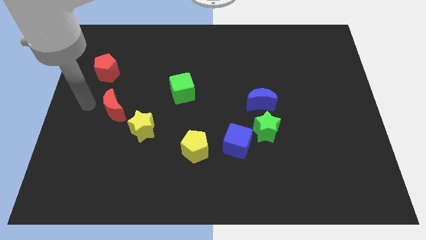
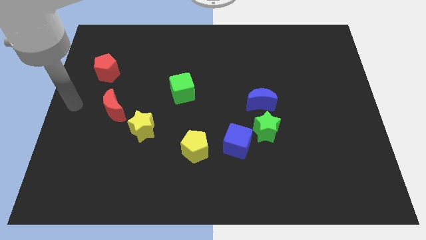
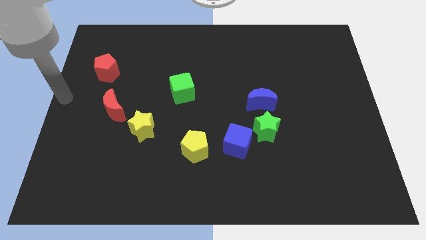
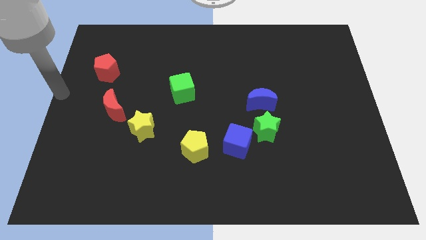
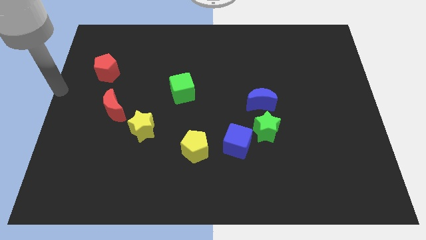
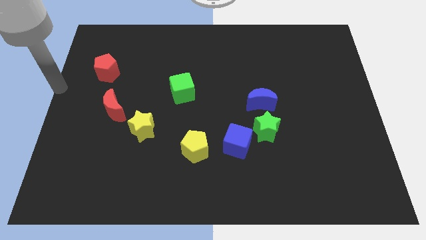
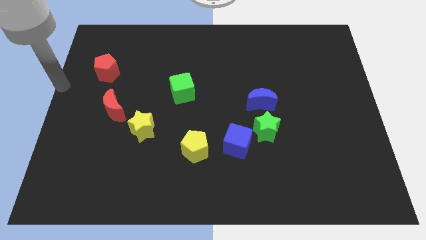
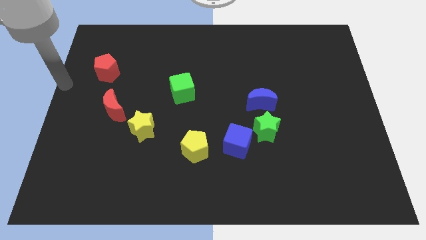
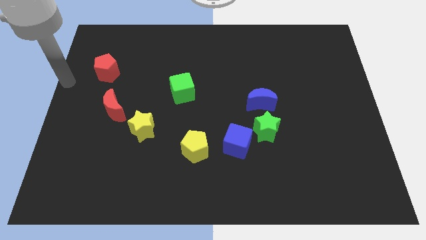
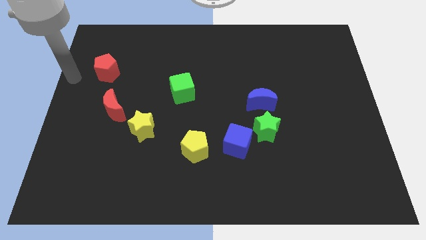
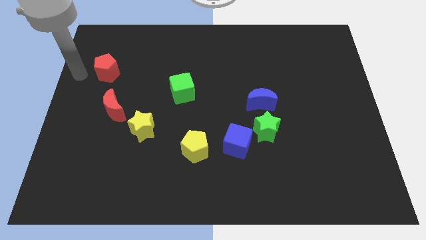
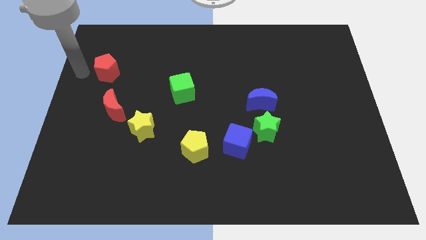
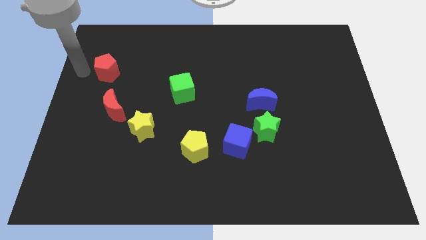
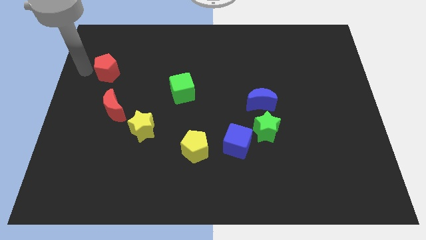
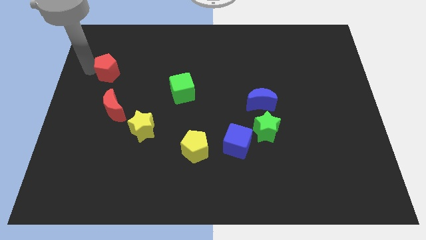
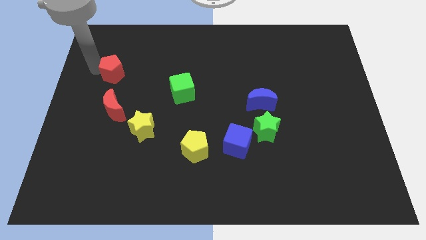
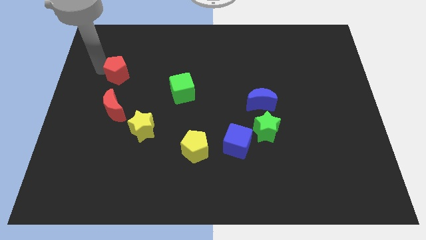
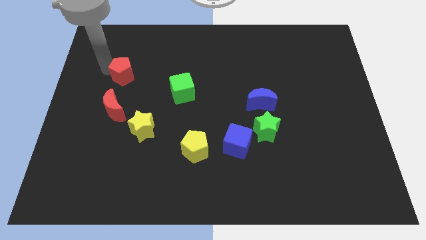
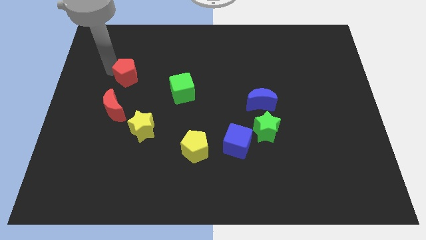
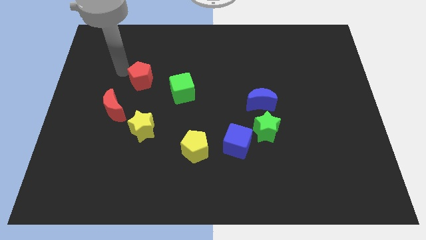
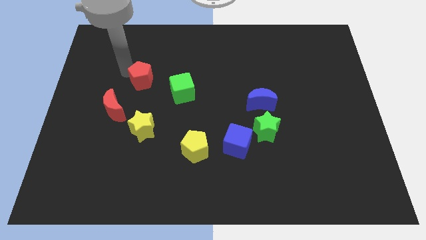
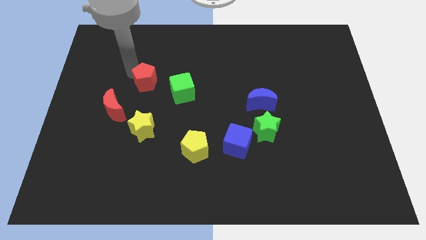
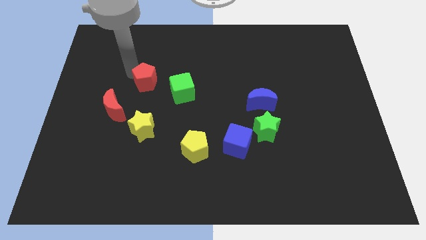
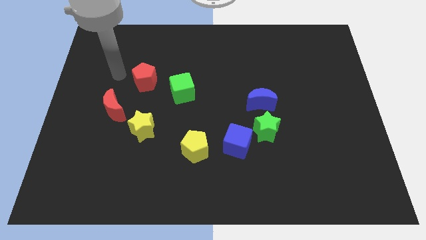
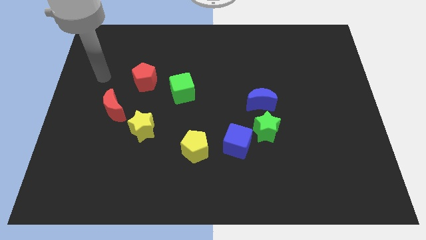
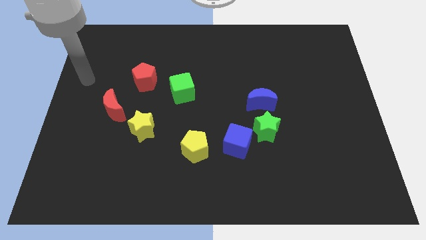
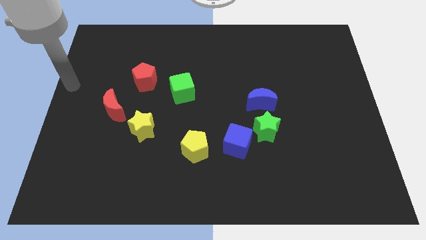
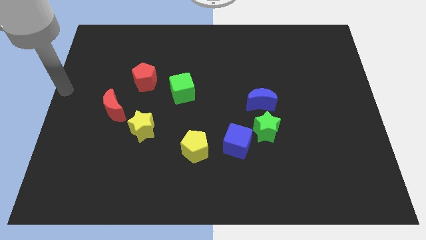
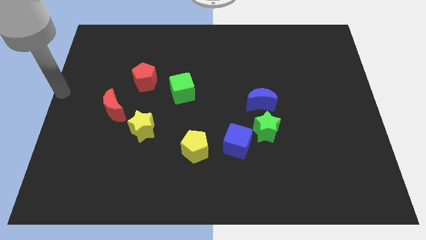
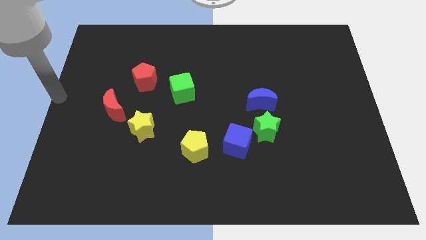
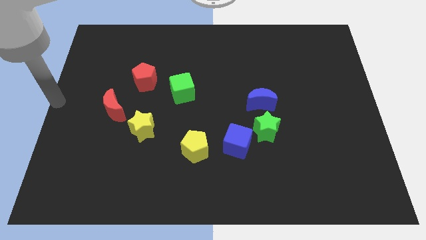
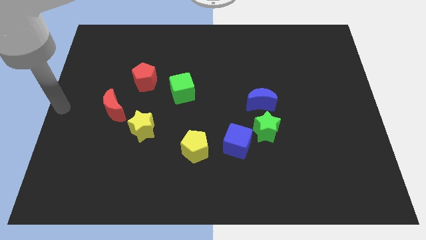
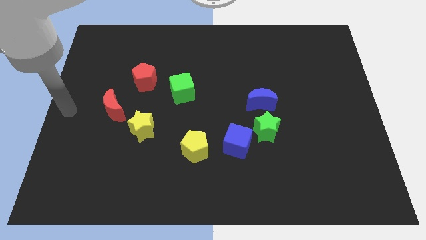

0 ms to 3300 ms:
push red pentagon towards green cube

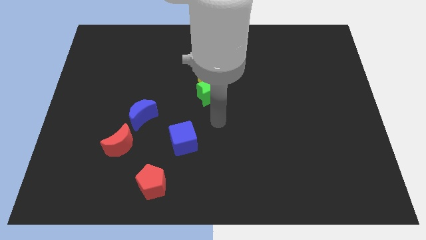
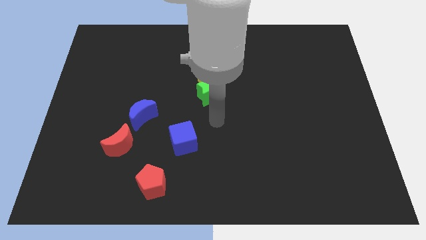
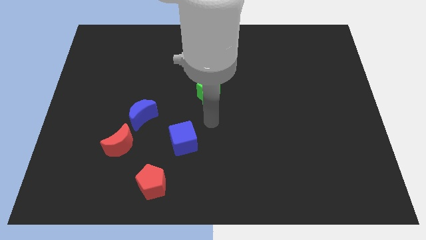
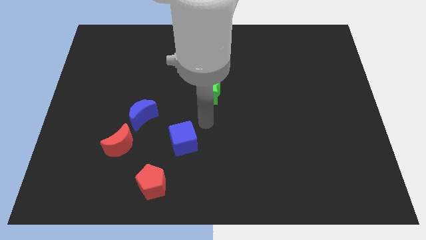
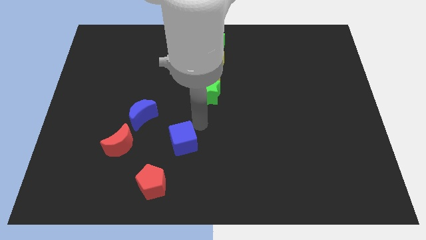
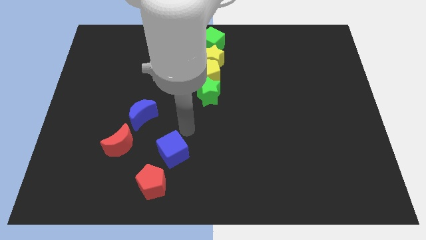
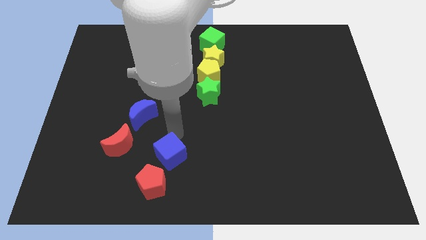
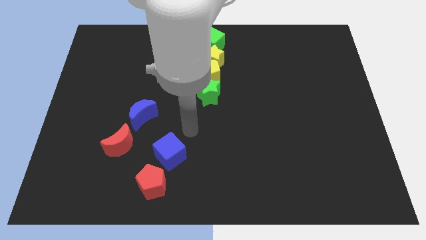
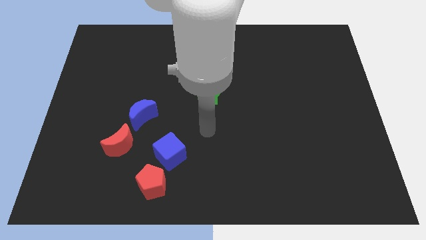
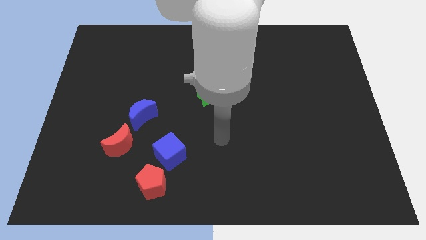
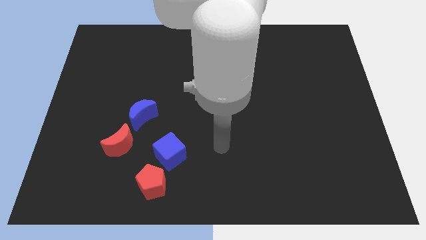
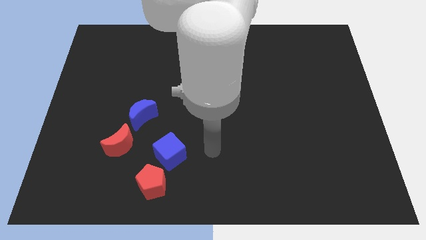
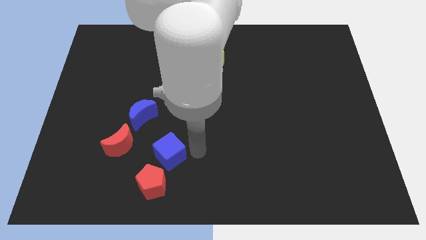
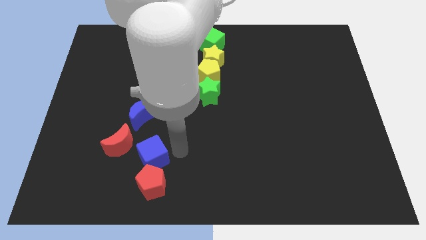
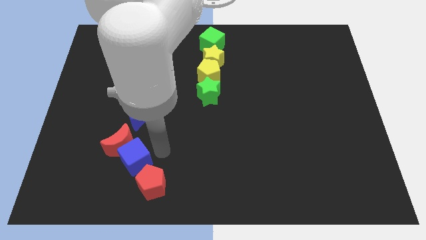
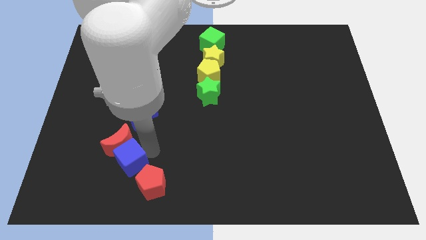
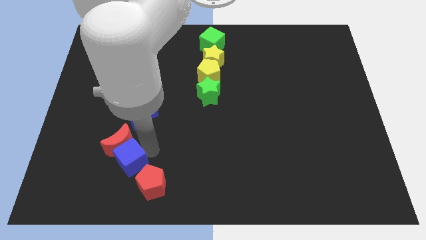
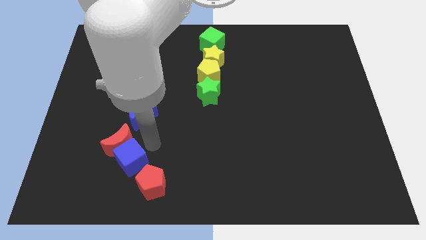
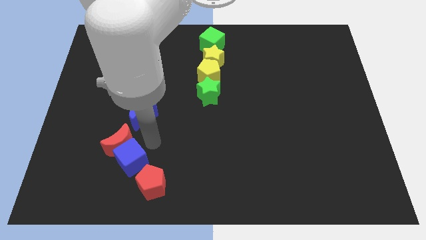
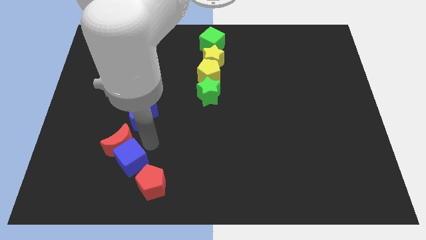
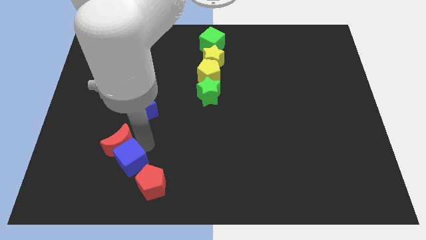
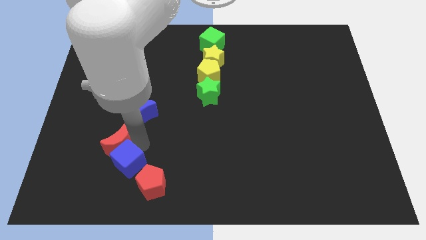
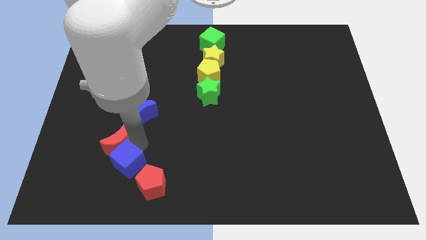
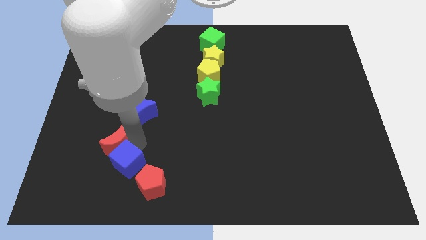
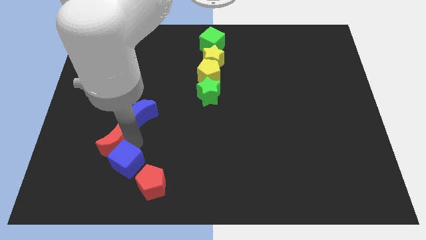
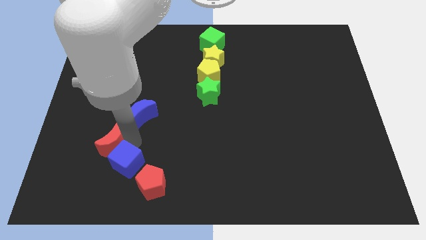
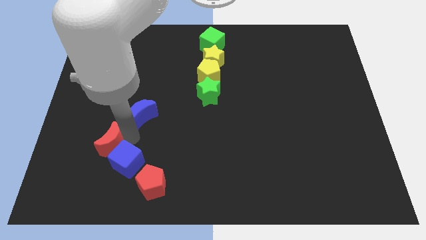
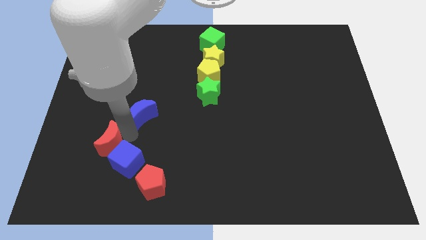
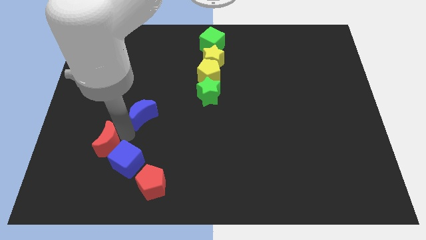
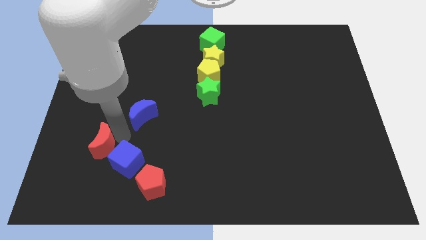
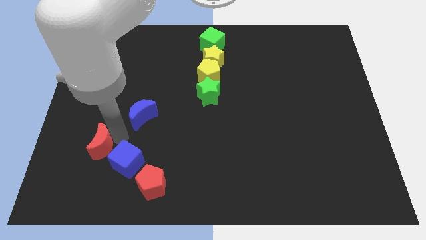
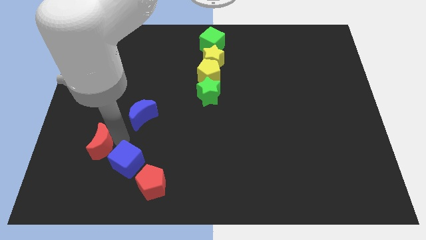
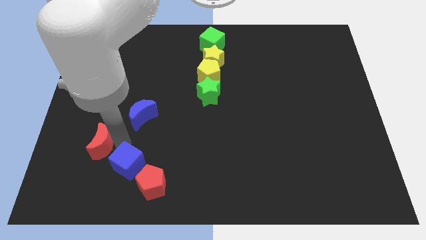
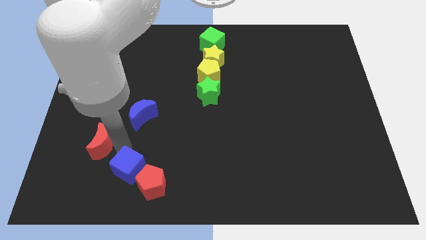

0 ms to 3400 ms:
move the blue cube in between red crescent and red pentagon

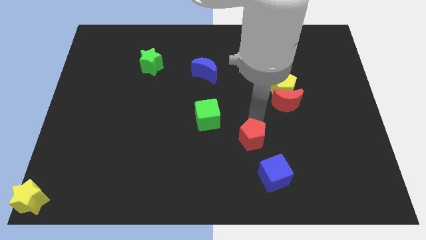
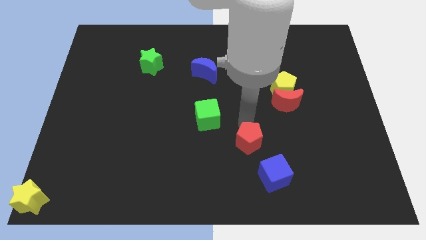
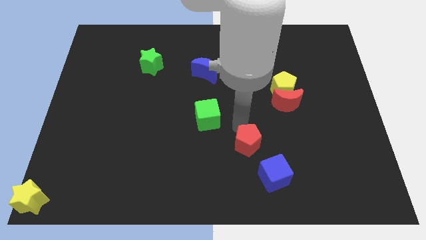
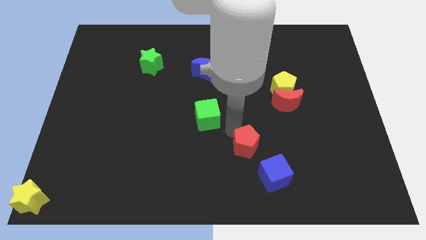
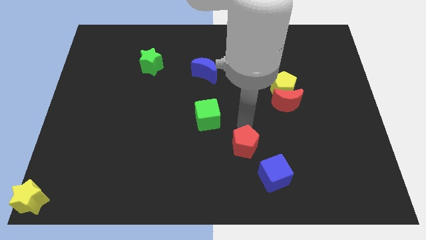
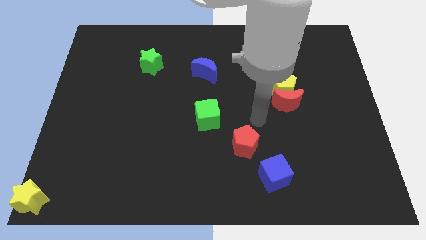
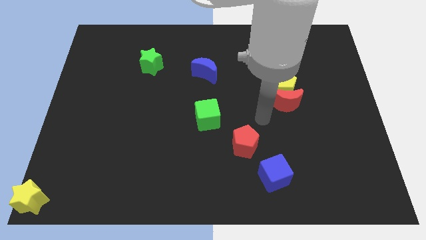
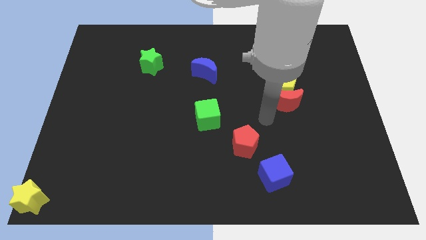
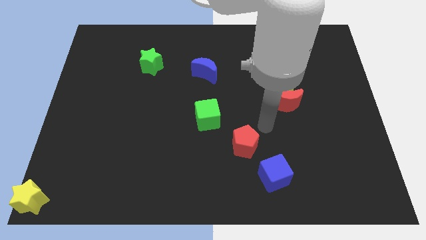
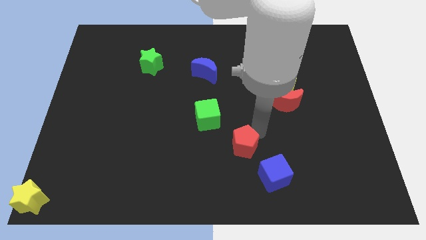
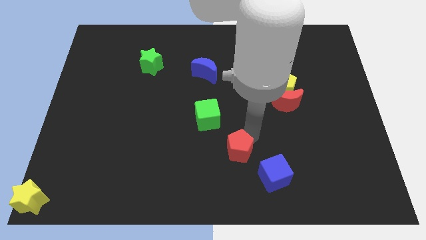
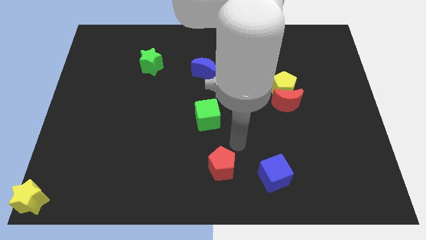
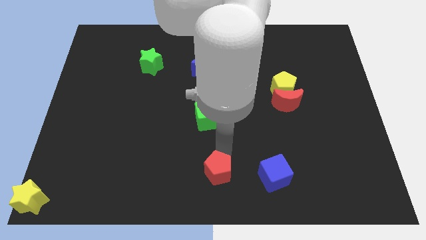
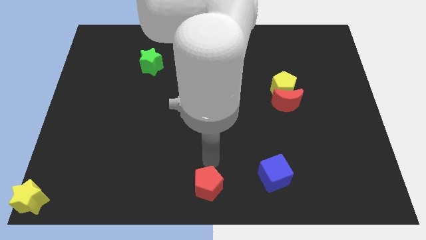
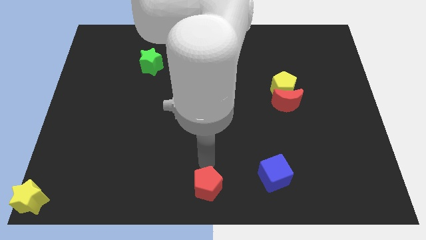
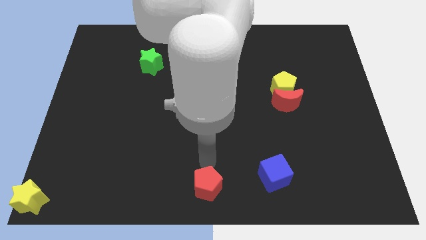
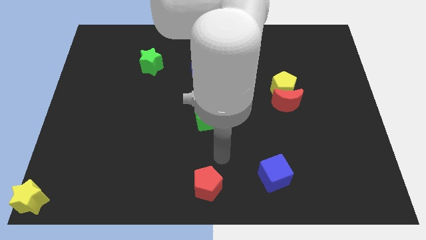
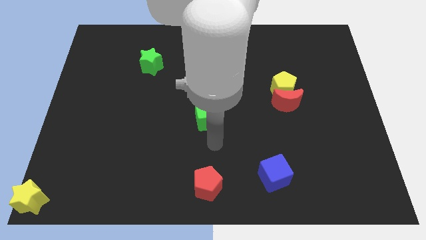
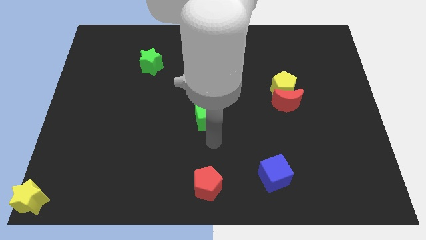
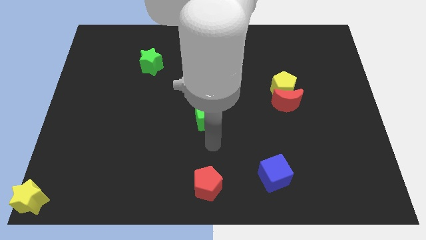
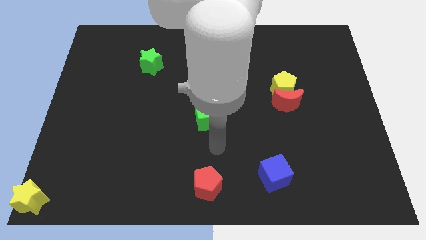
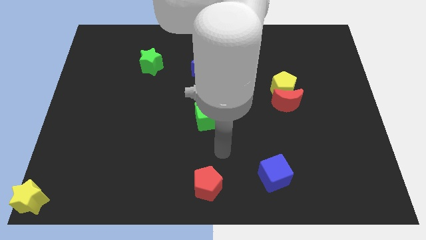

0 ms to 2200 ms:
place the red pentagon below the green cube
